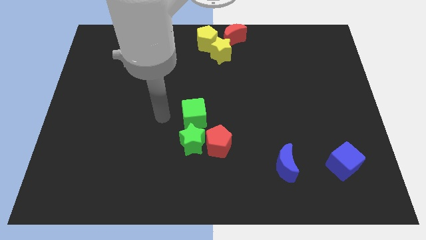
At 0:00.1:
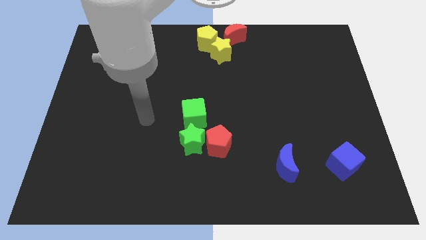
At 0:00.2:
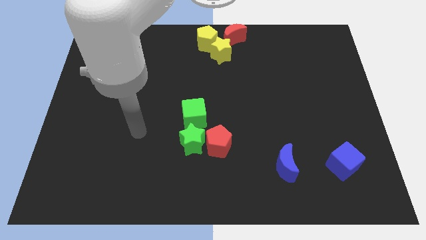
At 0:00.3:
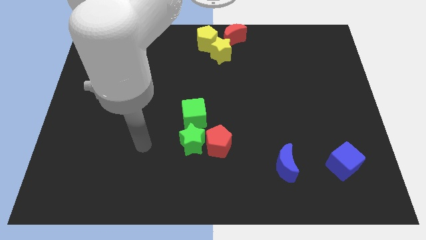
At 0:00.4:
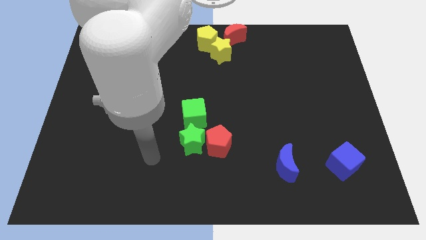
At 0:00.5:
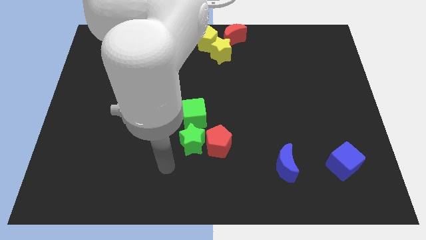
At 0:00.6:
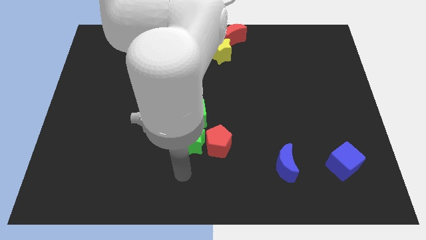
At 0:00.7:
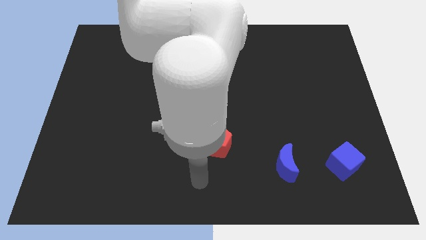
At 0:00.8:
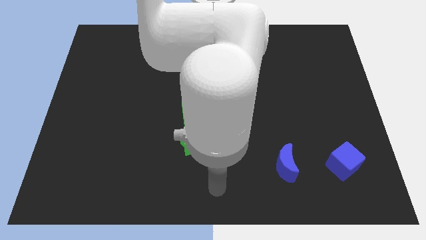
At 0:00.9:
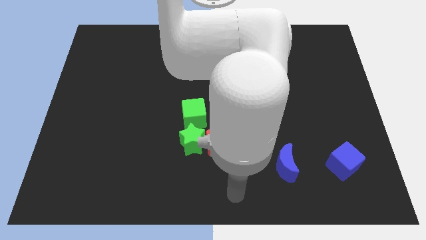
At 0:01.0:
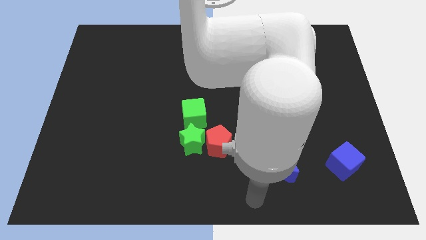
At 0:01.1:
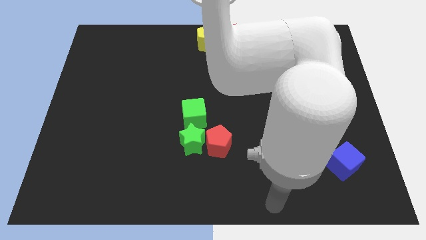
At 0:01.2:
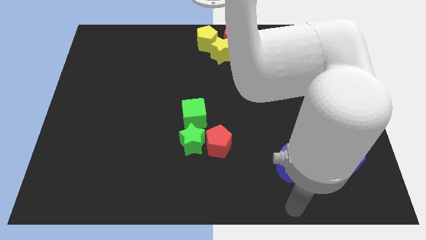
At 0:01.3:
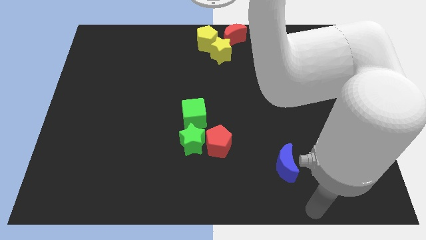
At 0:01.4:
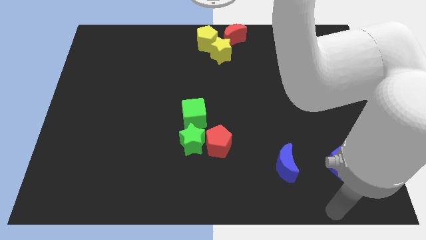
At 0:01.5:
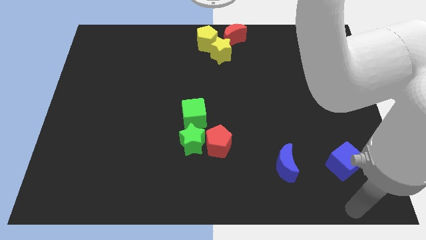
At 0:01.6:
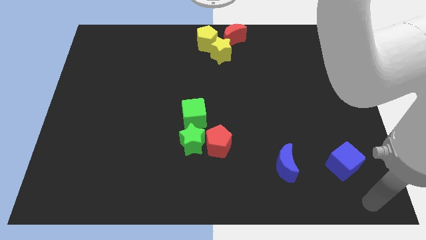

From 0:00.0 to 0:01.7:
move your arm towards the bottom right corner of the board

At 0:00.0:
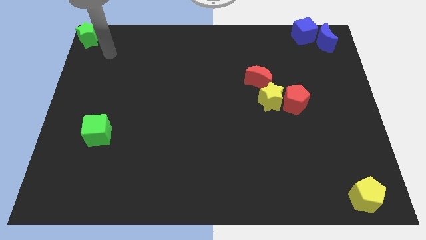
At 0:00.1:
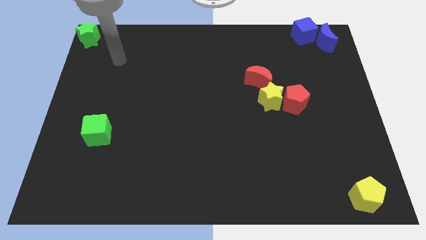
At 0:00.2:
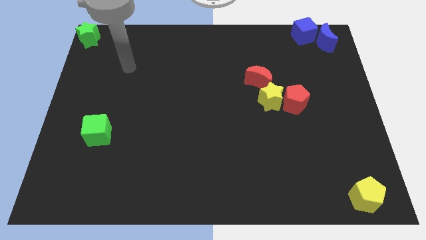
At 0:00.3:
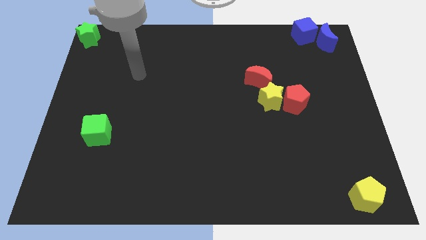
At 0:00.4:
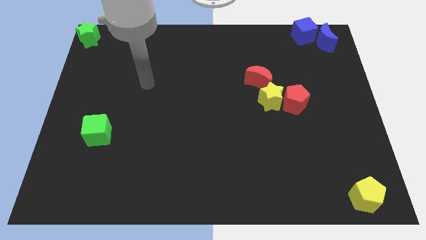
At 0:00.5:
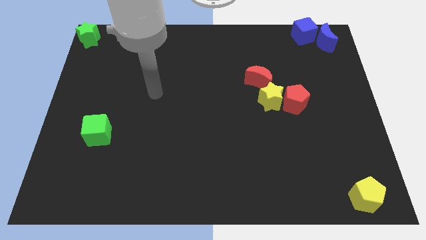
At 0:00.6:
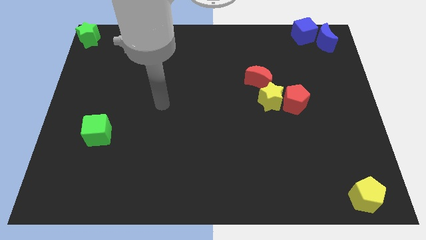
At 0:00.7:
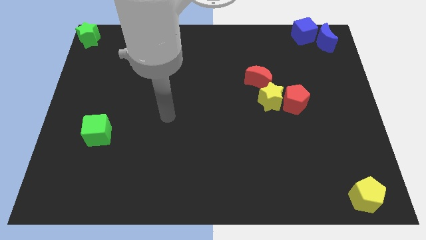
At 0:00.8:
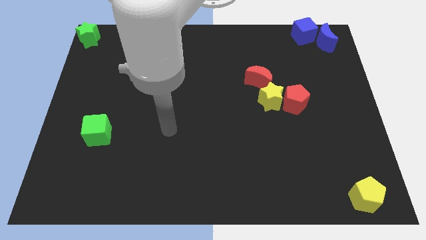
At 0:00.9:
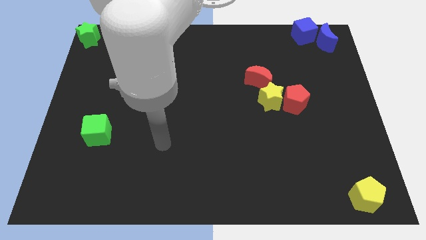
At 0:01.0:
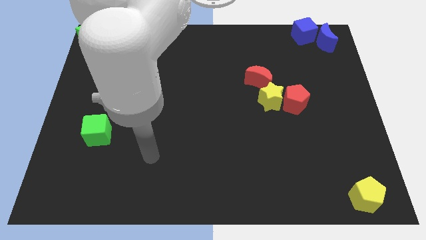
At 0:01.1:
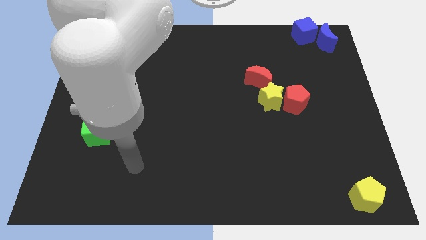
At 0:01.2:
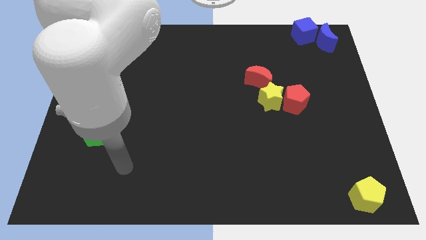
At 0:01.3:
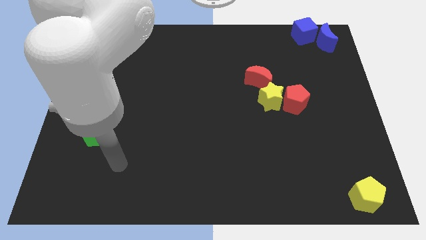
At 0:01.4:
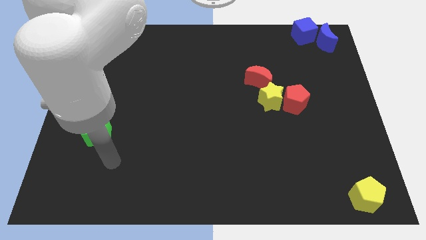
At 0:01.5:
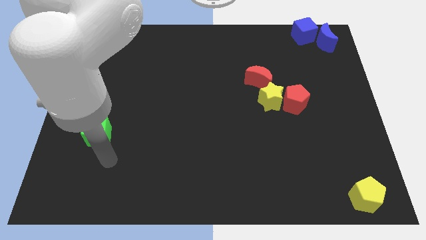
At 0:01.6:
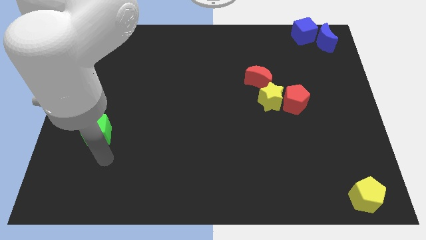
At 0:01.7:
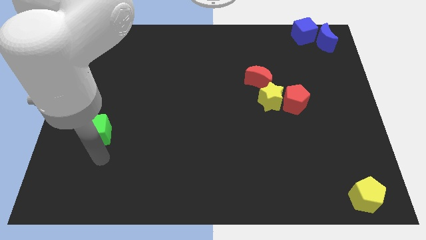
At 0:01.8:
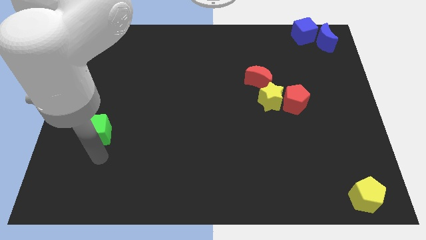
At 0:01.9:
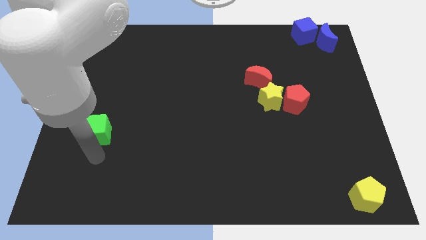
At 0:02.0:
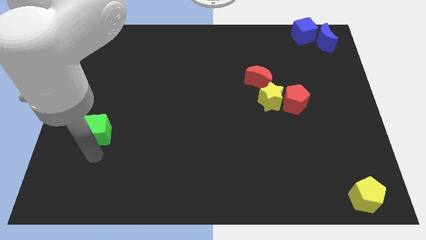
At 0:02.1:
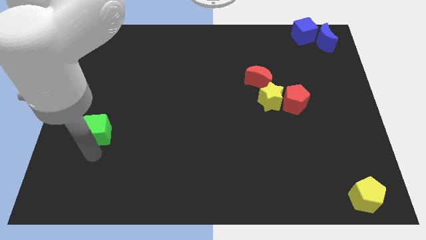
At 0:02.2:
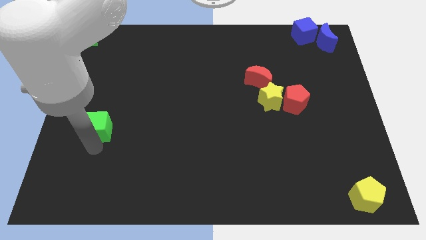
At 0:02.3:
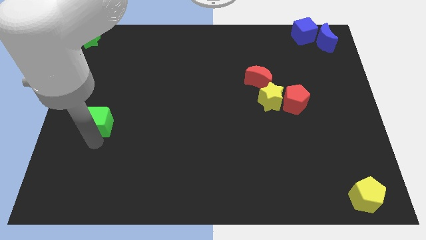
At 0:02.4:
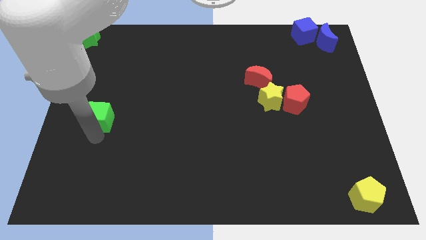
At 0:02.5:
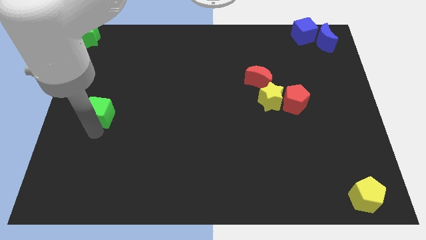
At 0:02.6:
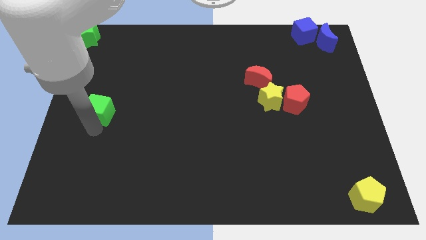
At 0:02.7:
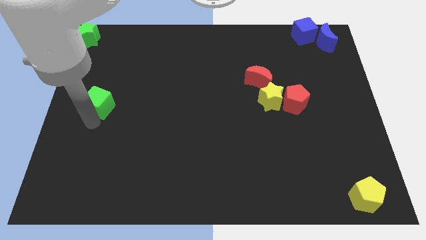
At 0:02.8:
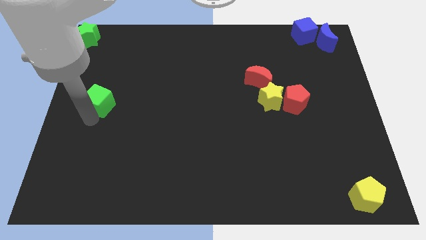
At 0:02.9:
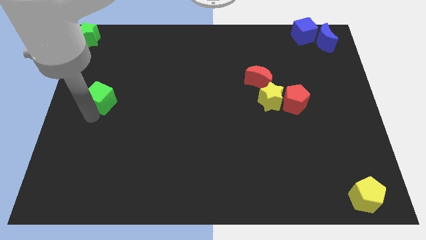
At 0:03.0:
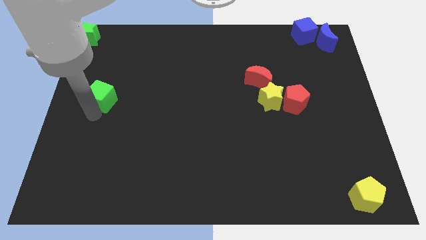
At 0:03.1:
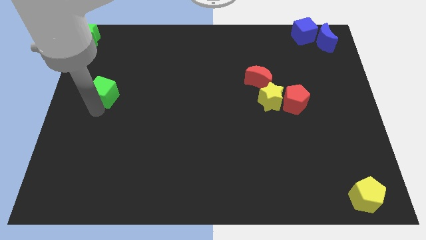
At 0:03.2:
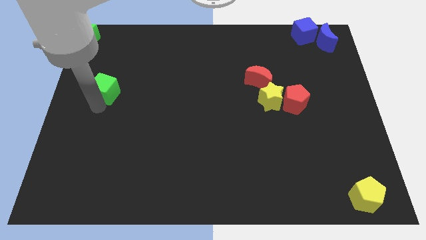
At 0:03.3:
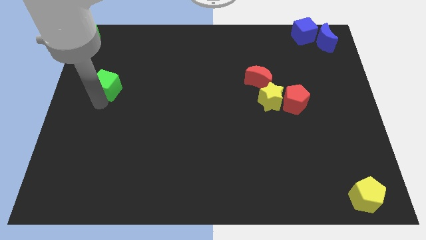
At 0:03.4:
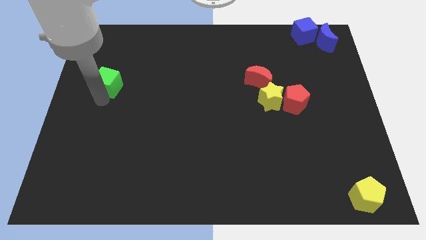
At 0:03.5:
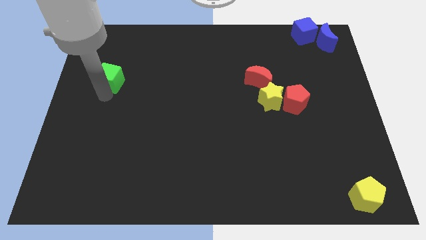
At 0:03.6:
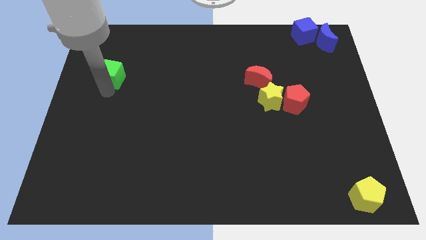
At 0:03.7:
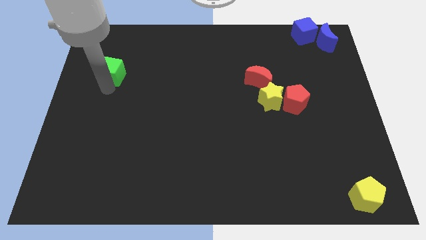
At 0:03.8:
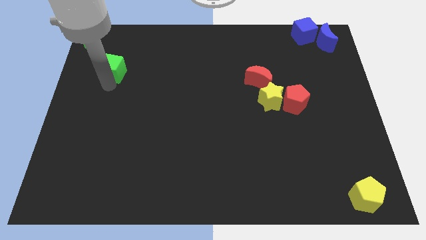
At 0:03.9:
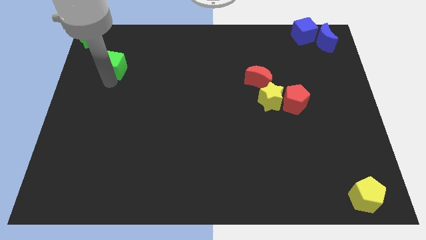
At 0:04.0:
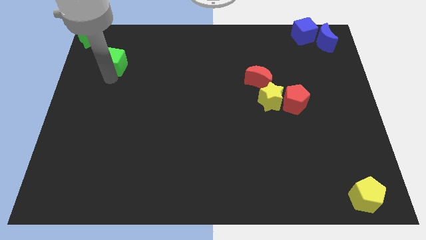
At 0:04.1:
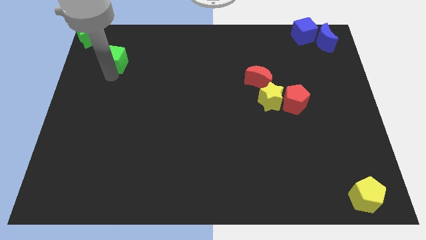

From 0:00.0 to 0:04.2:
move the green cube towards green star

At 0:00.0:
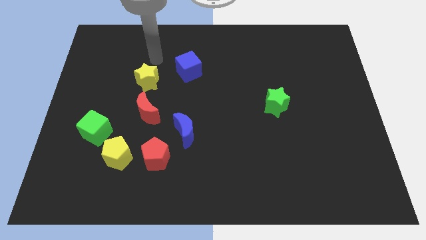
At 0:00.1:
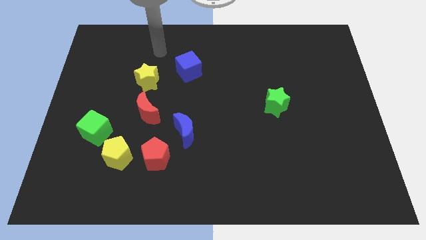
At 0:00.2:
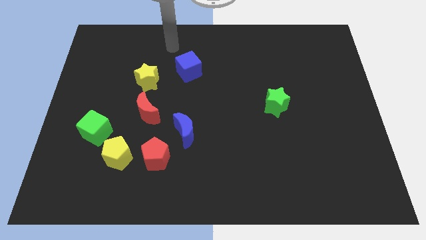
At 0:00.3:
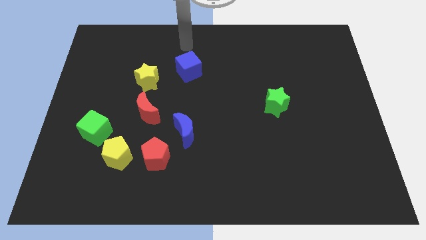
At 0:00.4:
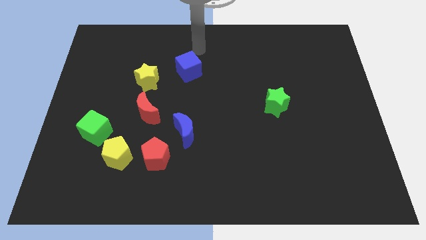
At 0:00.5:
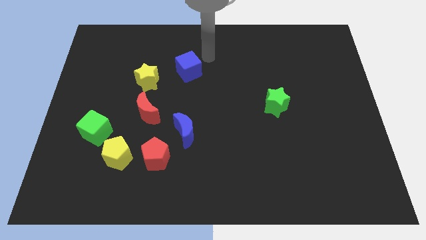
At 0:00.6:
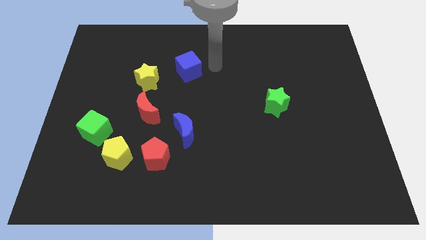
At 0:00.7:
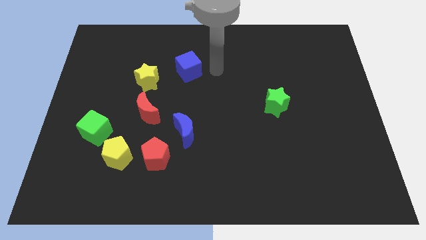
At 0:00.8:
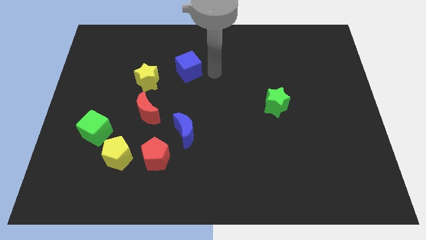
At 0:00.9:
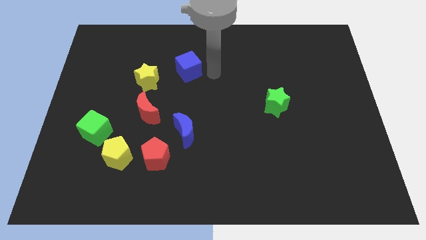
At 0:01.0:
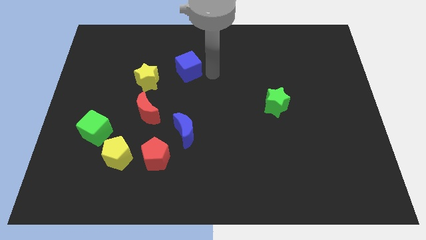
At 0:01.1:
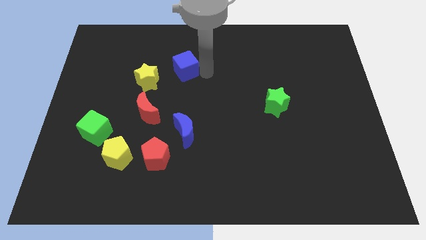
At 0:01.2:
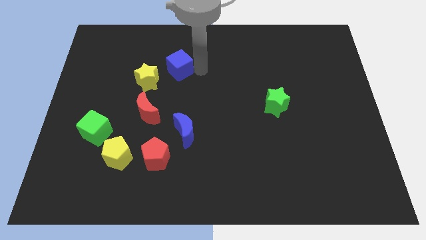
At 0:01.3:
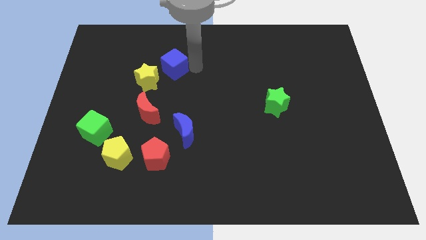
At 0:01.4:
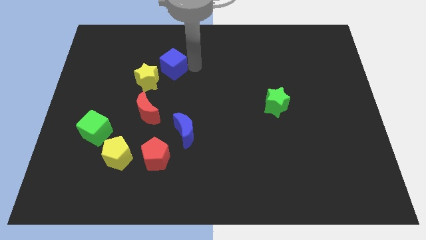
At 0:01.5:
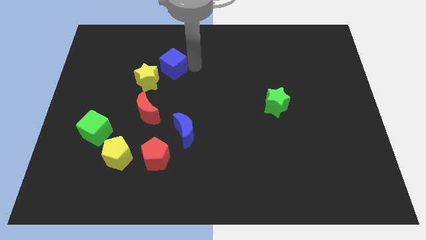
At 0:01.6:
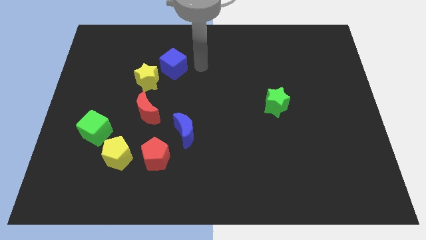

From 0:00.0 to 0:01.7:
move the blue cube to the left

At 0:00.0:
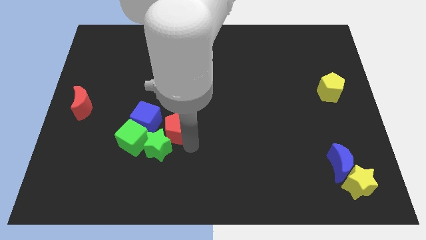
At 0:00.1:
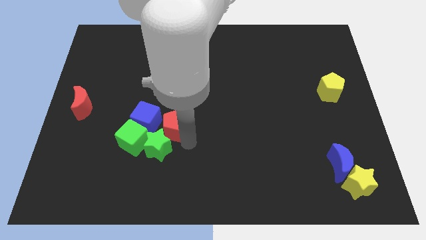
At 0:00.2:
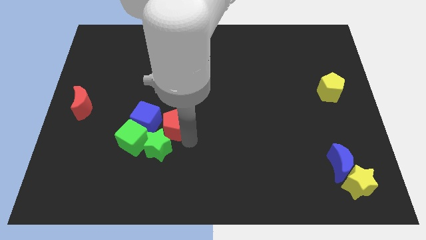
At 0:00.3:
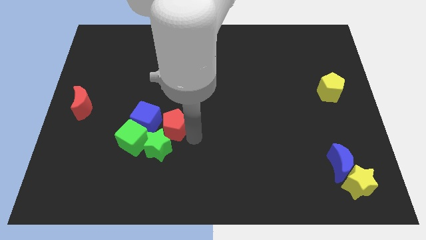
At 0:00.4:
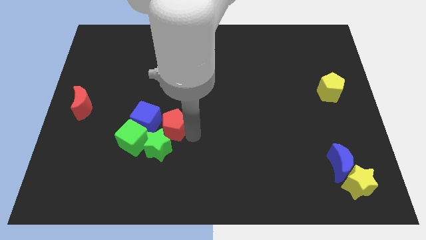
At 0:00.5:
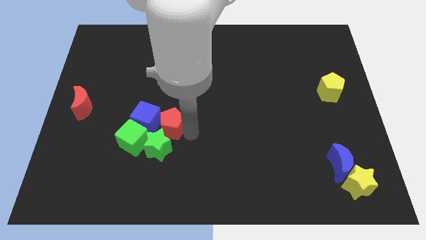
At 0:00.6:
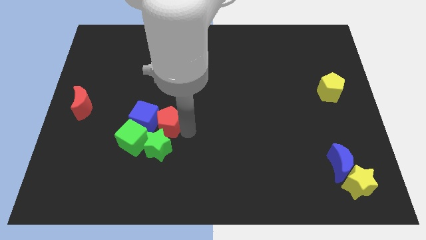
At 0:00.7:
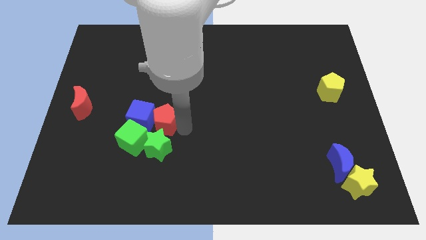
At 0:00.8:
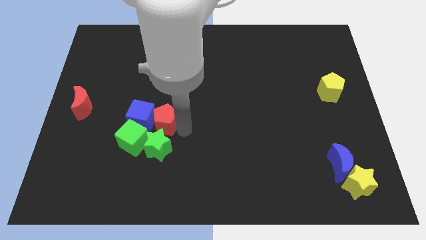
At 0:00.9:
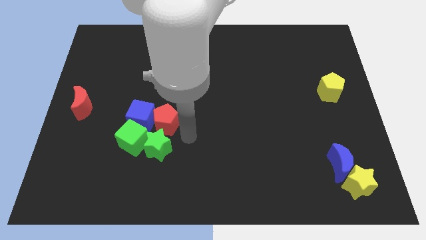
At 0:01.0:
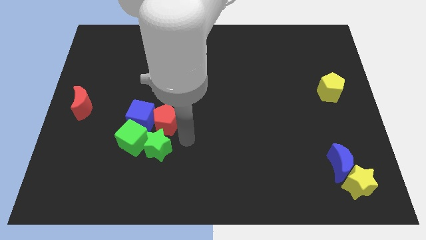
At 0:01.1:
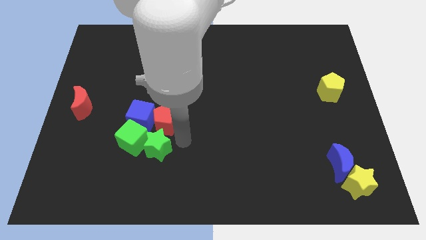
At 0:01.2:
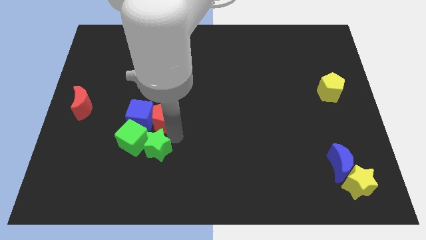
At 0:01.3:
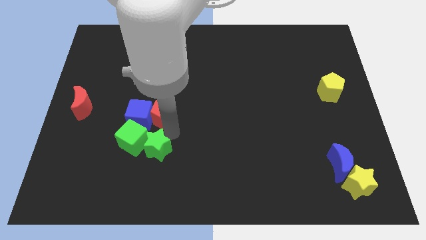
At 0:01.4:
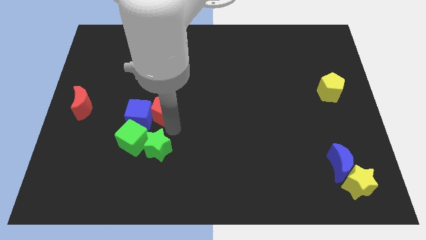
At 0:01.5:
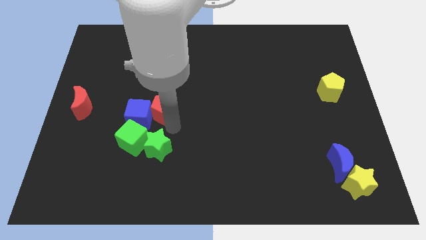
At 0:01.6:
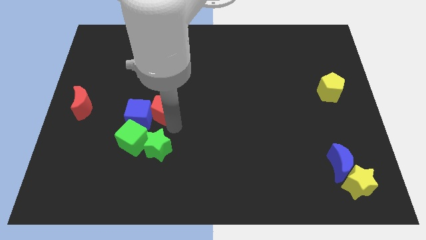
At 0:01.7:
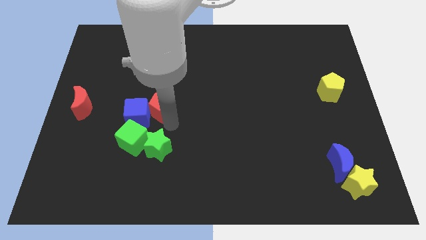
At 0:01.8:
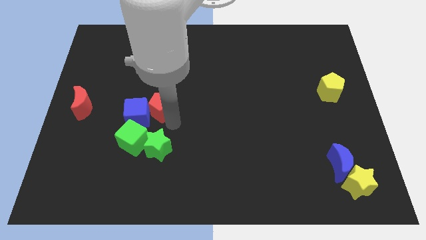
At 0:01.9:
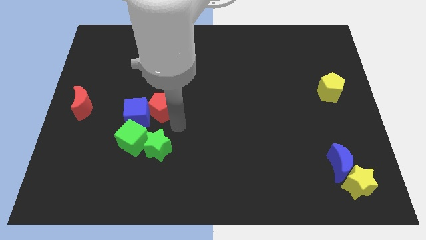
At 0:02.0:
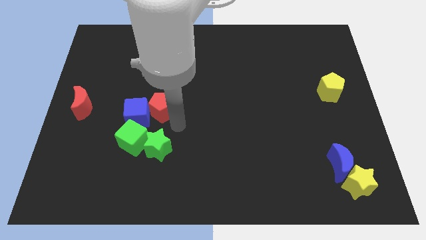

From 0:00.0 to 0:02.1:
push red pentagon into the blue cube
